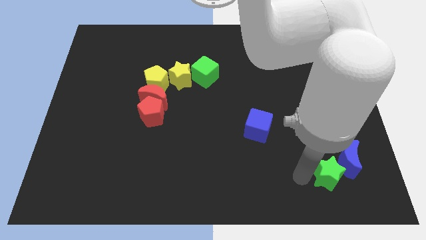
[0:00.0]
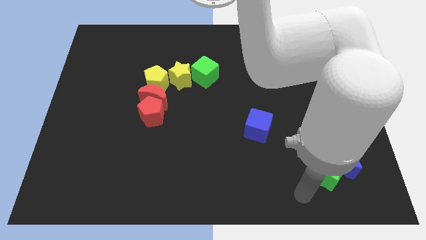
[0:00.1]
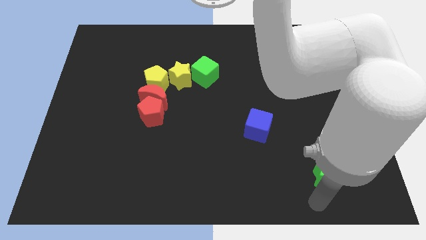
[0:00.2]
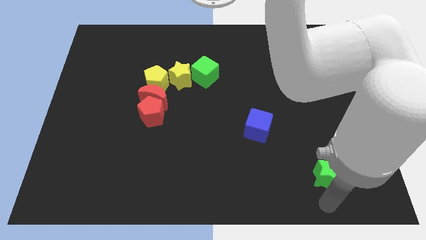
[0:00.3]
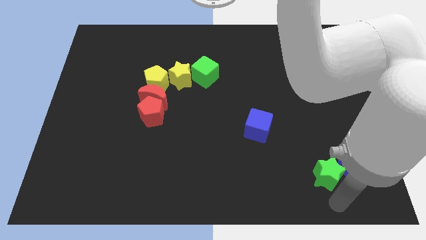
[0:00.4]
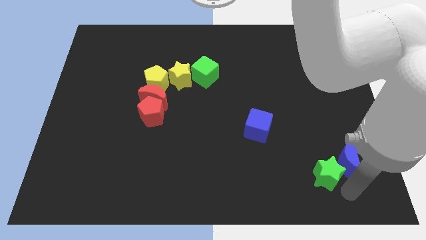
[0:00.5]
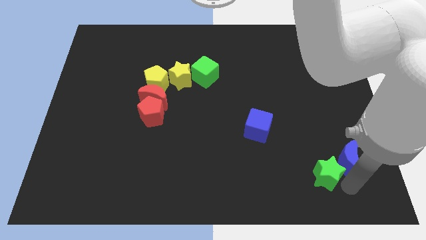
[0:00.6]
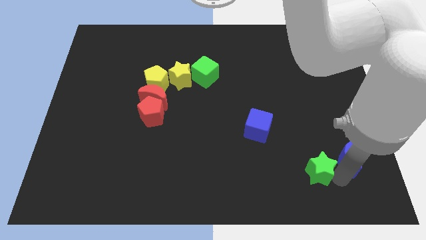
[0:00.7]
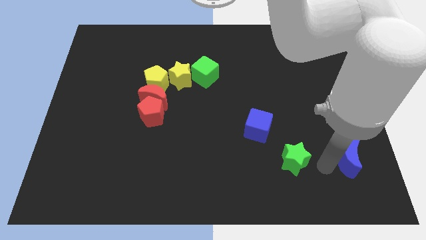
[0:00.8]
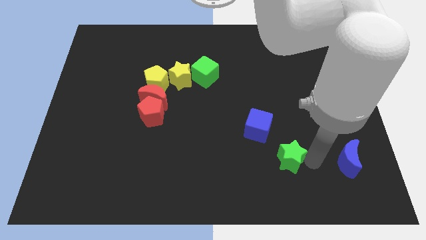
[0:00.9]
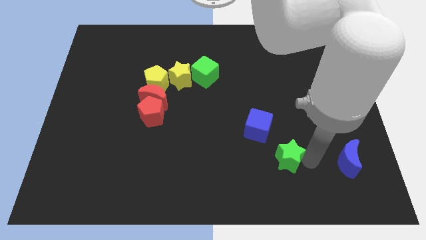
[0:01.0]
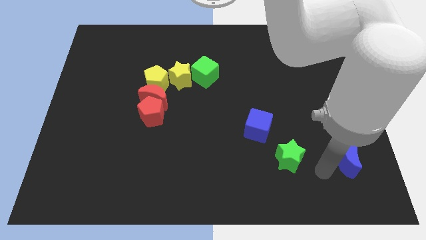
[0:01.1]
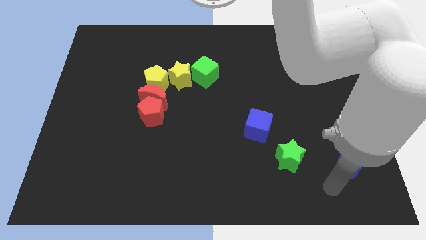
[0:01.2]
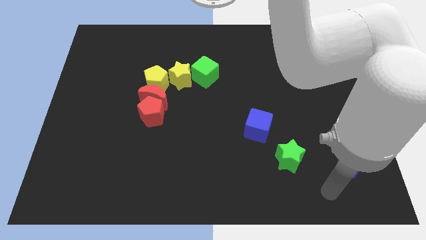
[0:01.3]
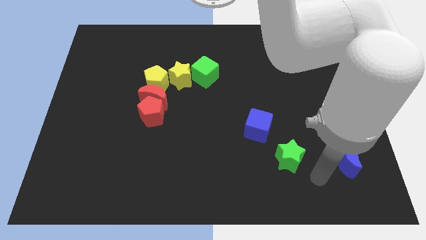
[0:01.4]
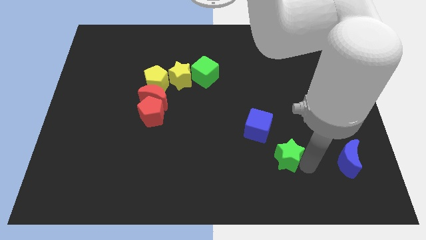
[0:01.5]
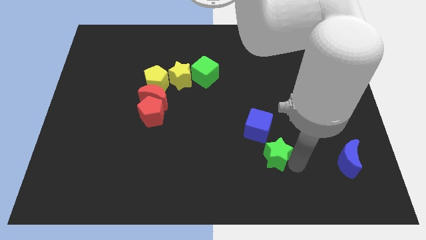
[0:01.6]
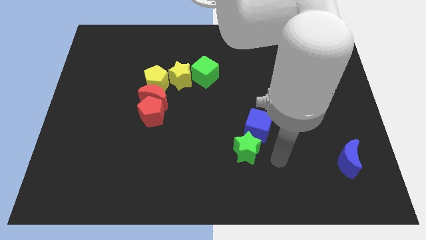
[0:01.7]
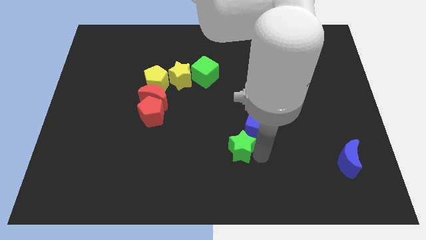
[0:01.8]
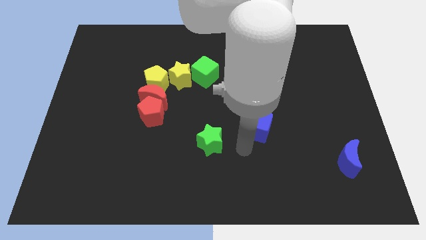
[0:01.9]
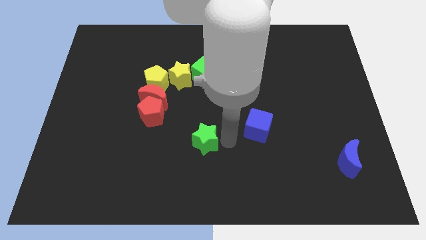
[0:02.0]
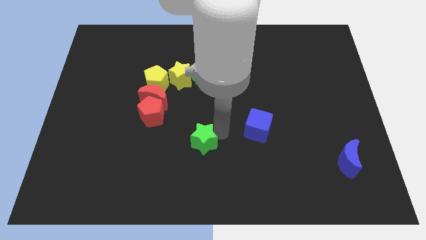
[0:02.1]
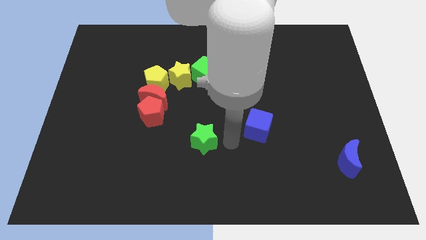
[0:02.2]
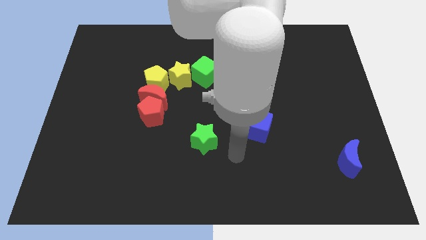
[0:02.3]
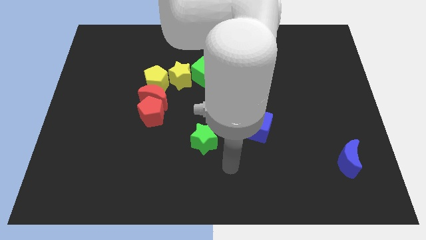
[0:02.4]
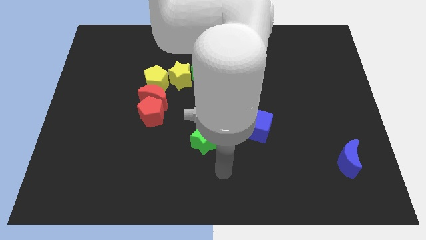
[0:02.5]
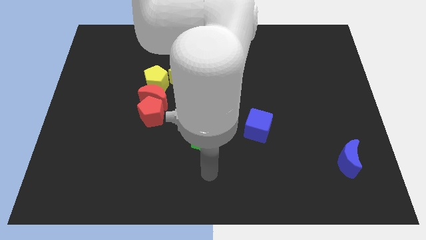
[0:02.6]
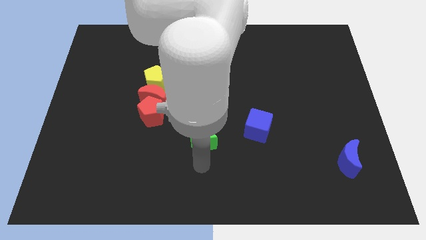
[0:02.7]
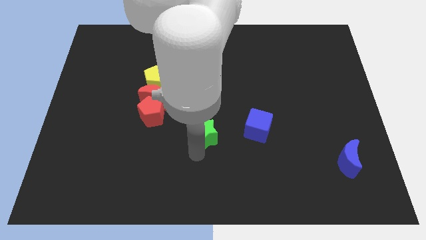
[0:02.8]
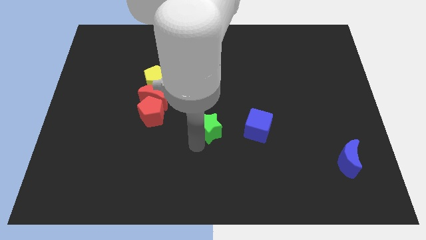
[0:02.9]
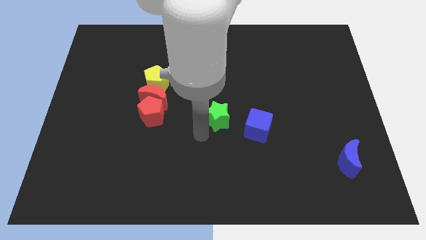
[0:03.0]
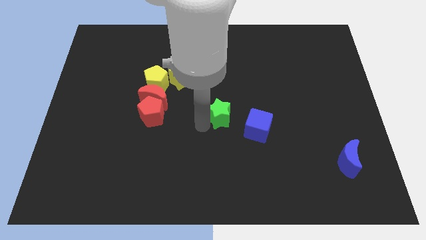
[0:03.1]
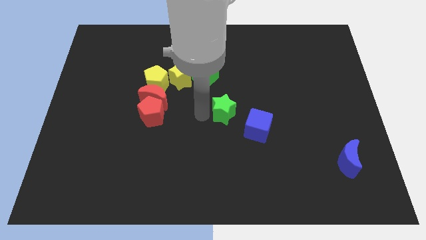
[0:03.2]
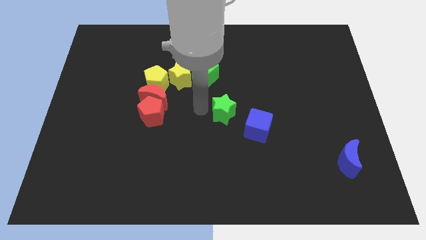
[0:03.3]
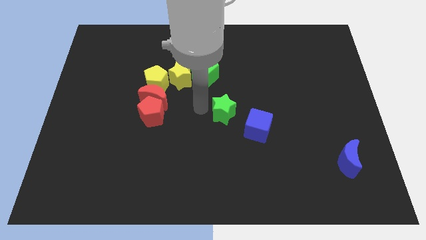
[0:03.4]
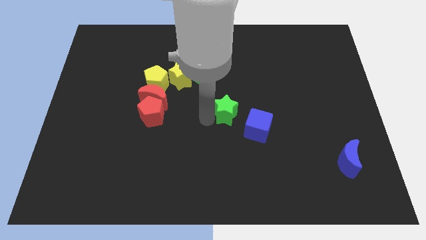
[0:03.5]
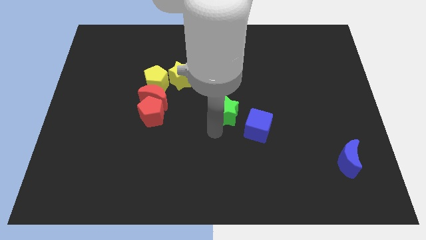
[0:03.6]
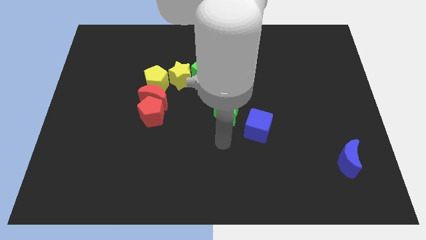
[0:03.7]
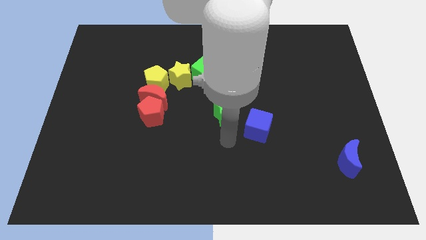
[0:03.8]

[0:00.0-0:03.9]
place green star top left to the blue cube

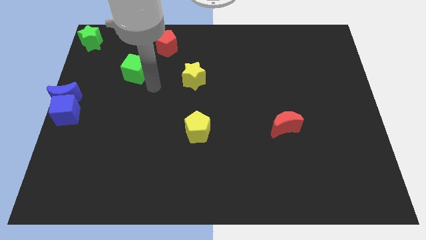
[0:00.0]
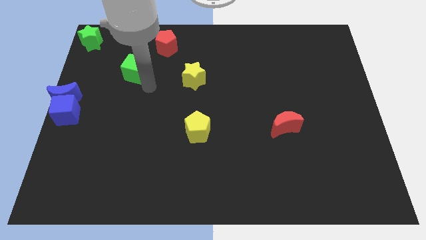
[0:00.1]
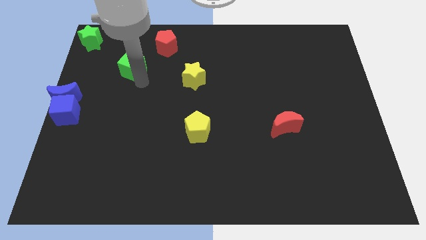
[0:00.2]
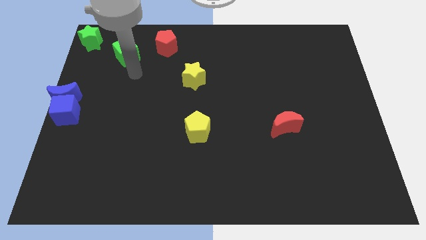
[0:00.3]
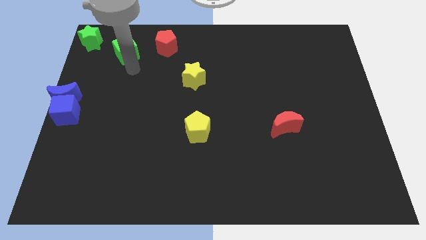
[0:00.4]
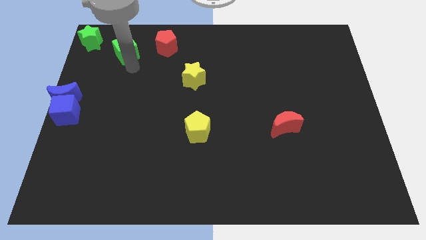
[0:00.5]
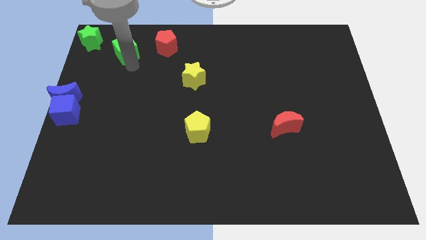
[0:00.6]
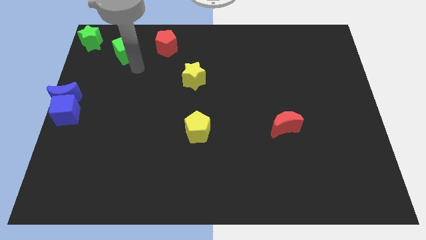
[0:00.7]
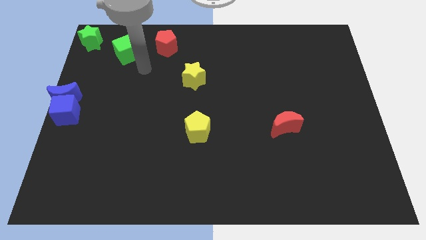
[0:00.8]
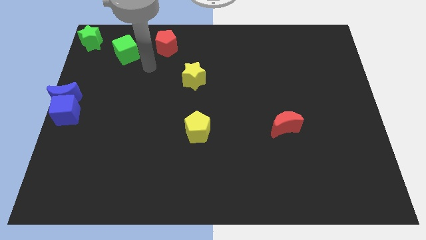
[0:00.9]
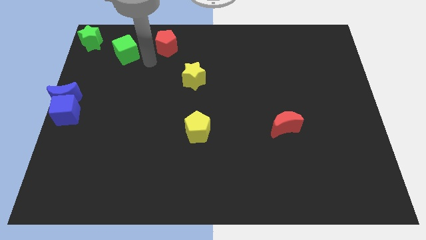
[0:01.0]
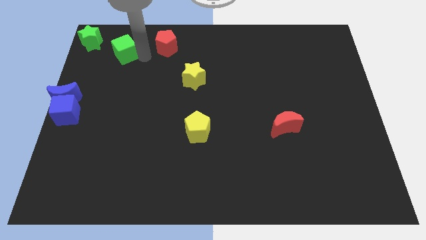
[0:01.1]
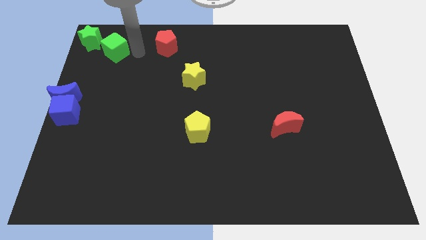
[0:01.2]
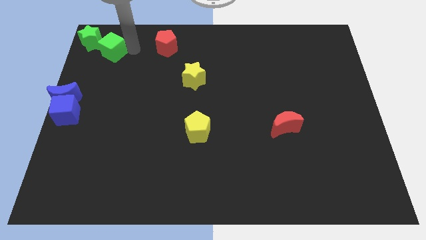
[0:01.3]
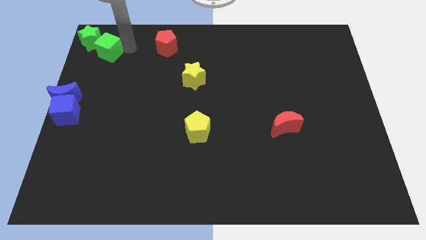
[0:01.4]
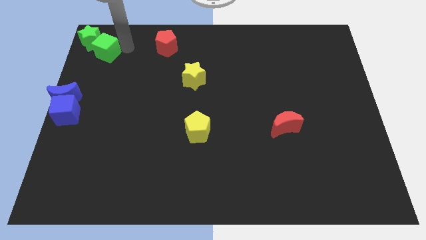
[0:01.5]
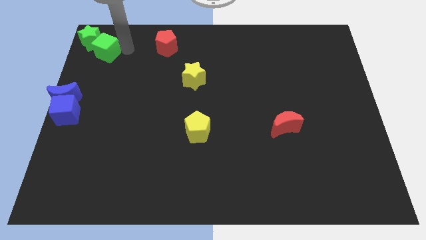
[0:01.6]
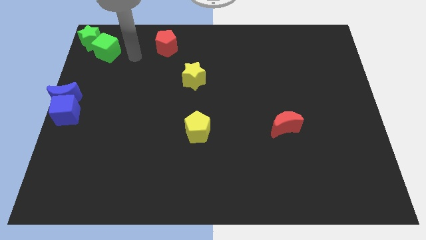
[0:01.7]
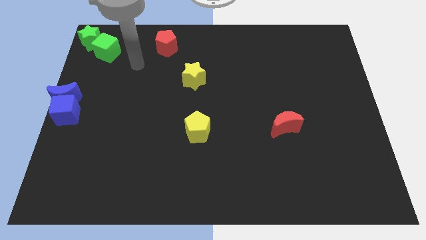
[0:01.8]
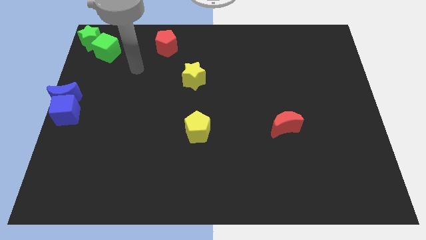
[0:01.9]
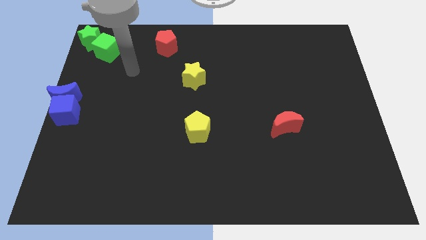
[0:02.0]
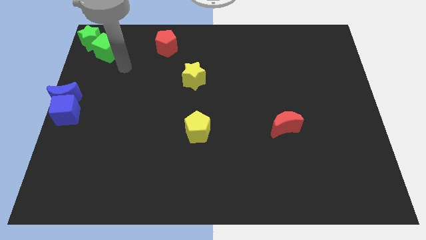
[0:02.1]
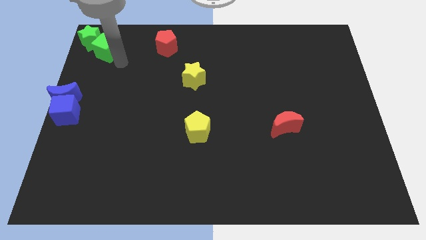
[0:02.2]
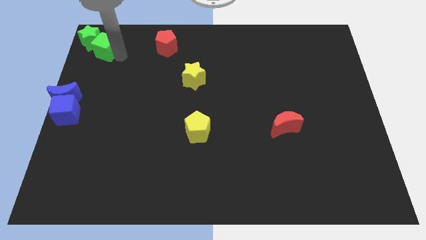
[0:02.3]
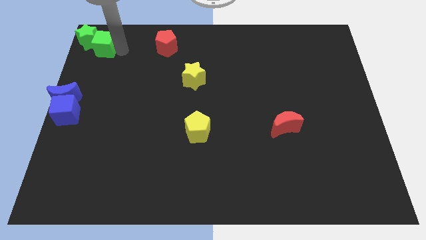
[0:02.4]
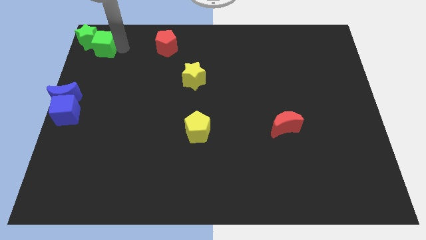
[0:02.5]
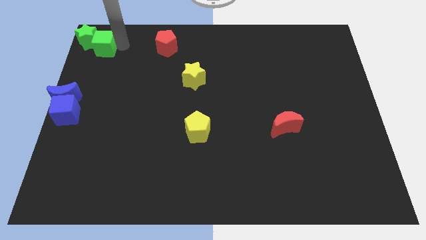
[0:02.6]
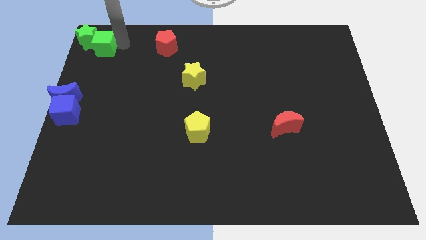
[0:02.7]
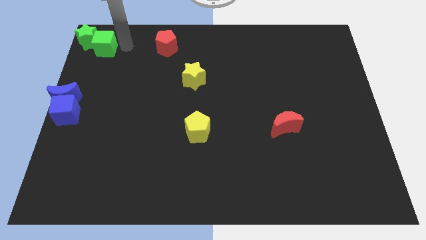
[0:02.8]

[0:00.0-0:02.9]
push the green cube into the green star

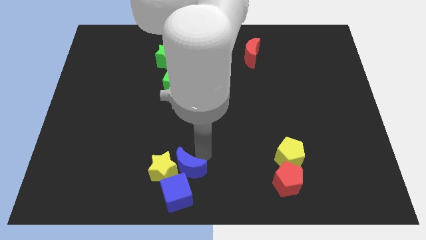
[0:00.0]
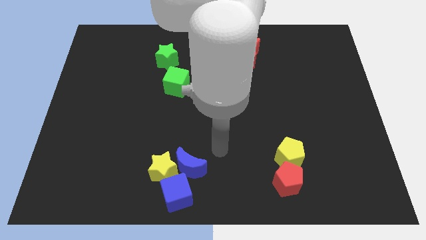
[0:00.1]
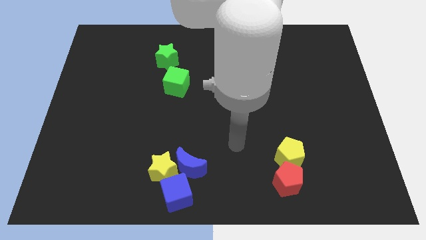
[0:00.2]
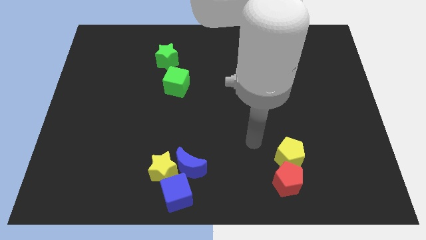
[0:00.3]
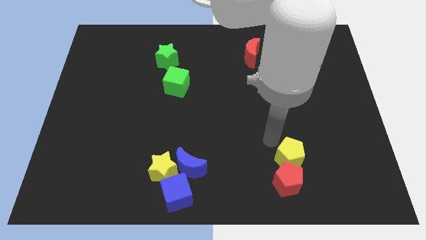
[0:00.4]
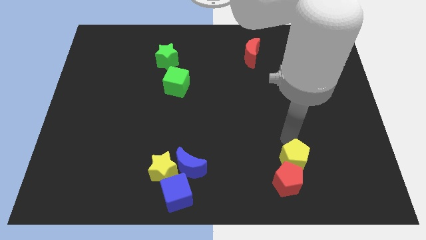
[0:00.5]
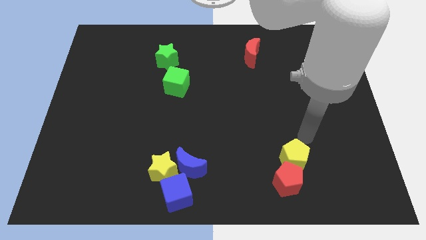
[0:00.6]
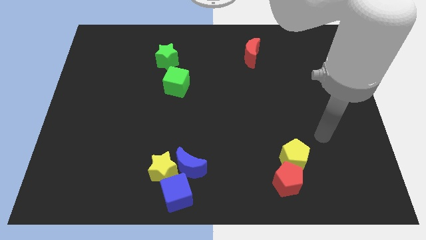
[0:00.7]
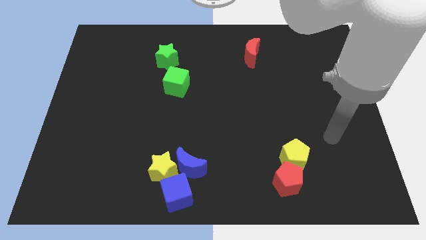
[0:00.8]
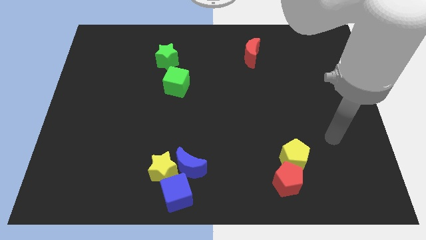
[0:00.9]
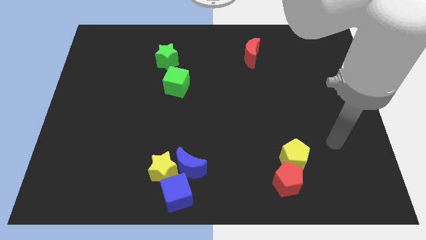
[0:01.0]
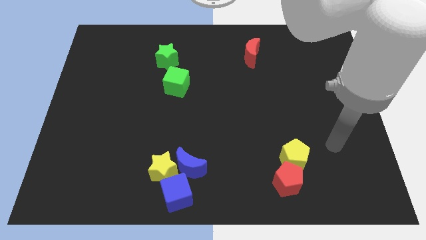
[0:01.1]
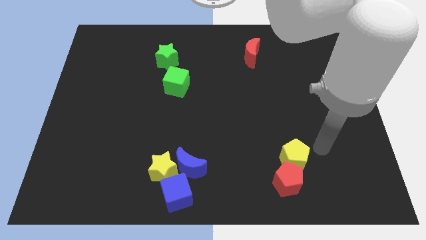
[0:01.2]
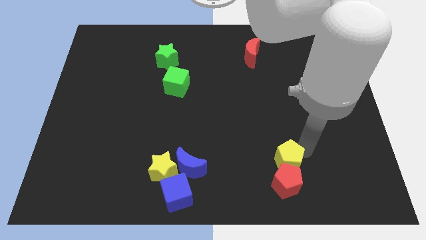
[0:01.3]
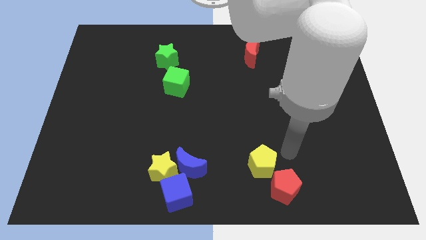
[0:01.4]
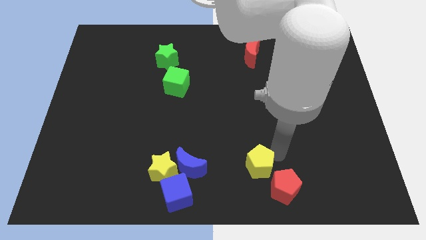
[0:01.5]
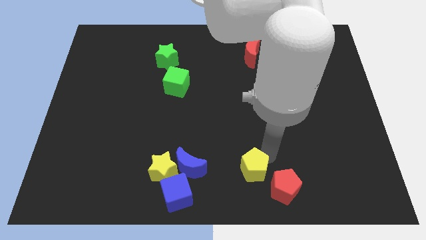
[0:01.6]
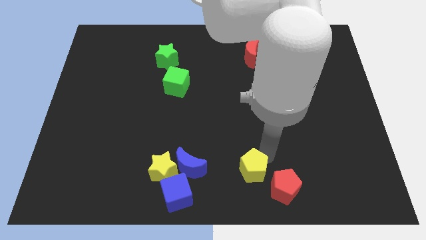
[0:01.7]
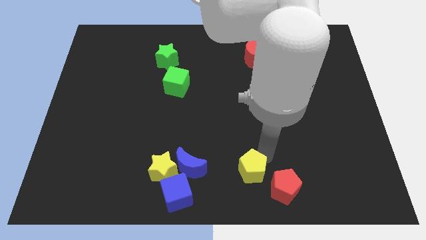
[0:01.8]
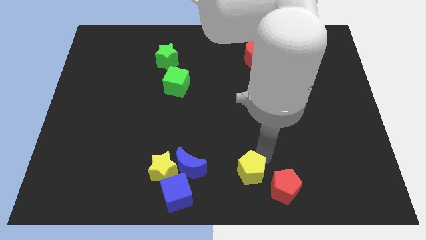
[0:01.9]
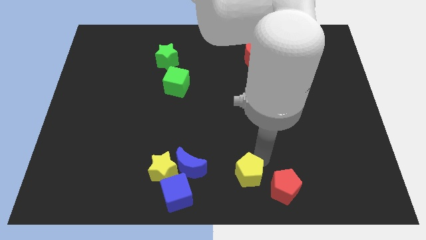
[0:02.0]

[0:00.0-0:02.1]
separate the yellow pentagon from red pentagon

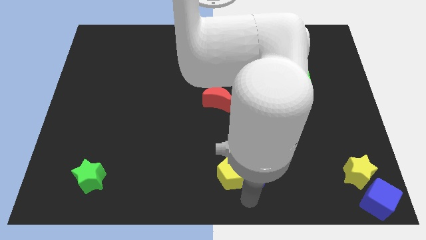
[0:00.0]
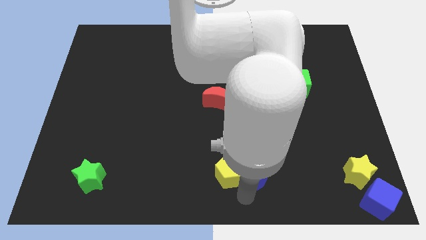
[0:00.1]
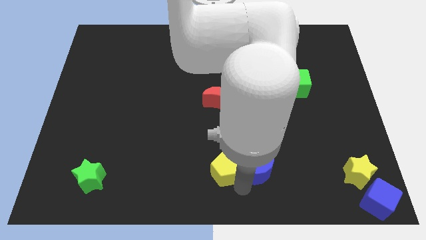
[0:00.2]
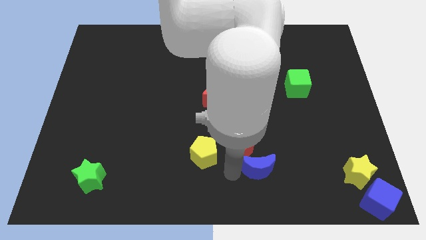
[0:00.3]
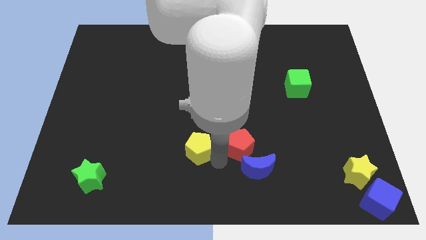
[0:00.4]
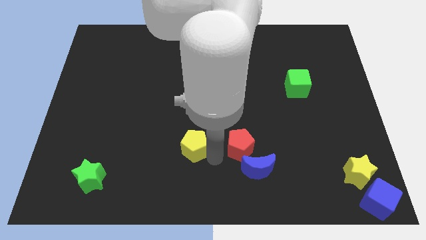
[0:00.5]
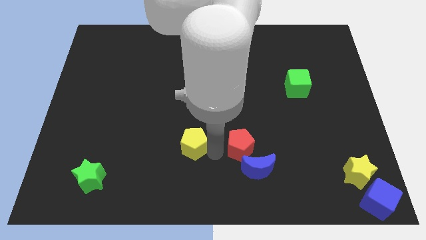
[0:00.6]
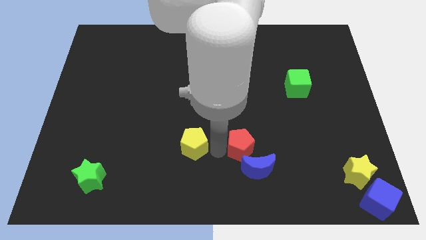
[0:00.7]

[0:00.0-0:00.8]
place the yellow pentagon to the left side of the red pentagon
